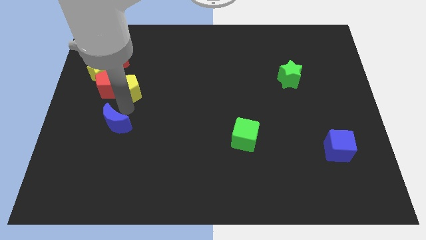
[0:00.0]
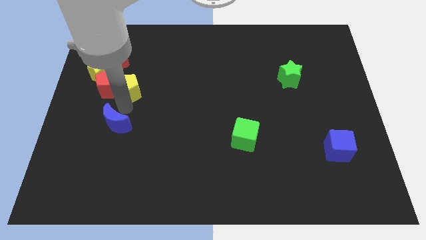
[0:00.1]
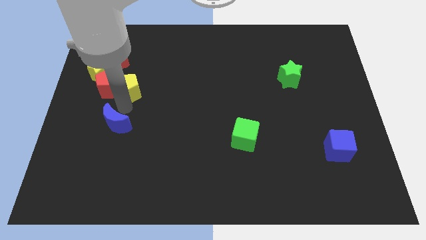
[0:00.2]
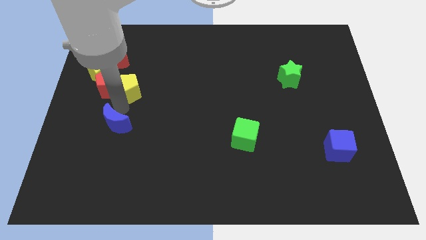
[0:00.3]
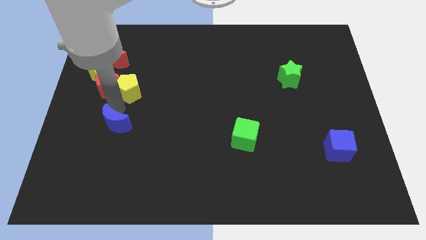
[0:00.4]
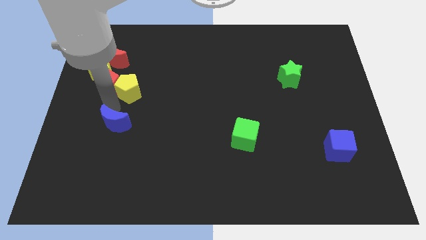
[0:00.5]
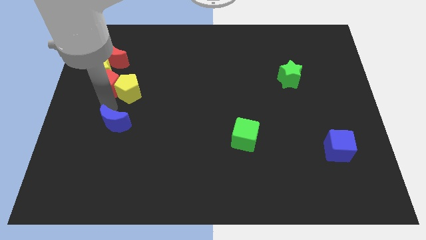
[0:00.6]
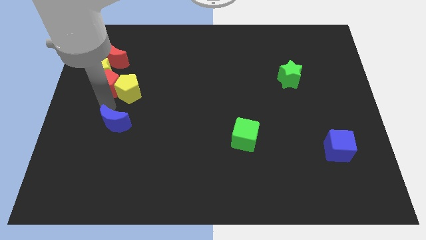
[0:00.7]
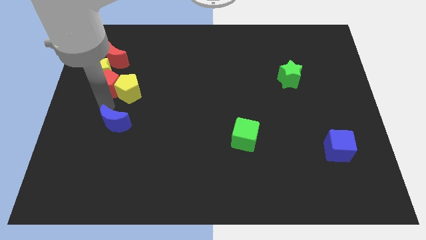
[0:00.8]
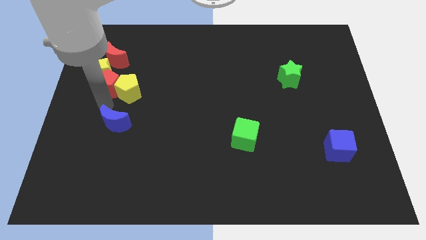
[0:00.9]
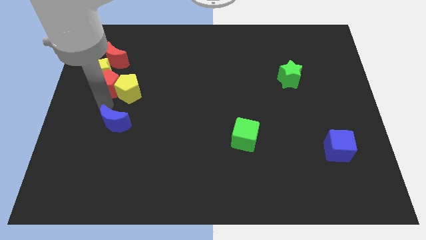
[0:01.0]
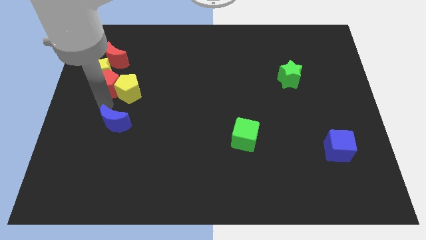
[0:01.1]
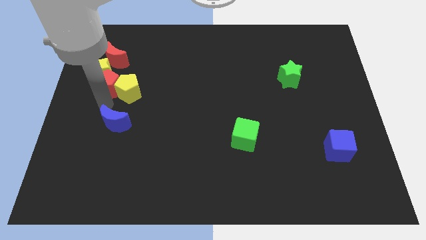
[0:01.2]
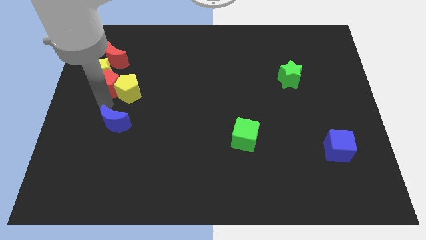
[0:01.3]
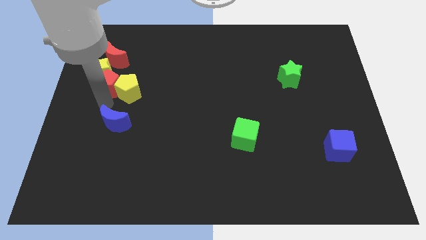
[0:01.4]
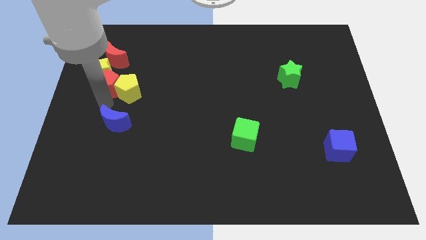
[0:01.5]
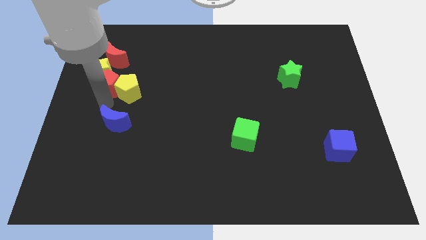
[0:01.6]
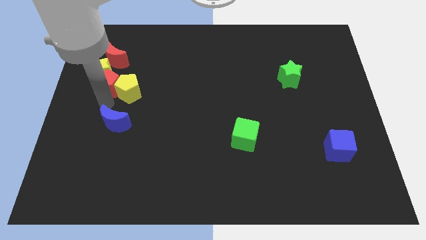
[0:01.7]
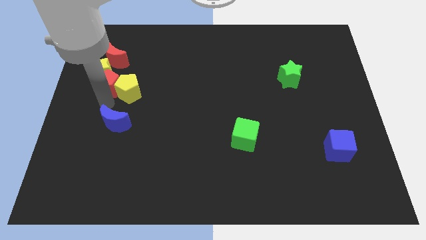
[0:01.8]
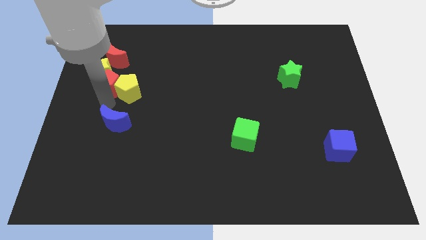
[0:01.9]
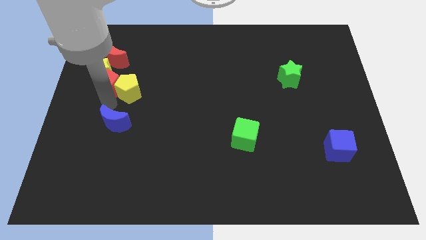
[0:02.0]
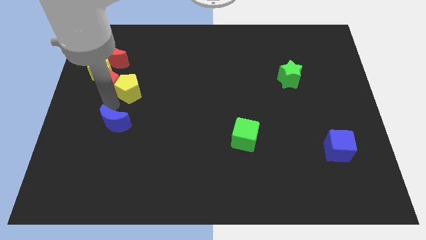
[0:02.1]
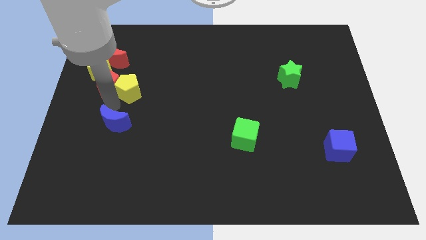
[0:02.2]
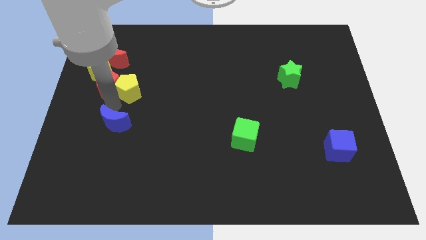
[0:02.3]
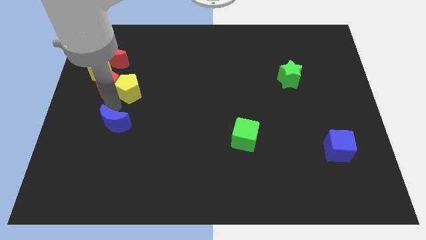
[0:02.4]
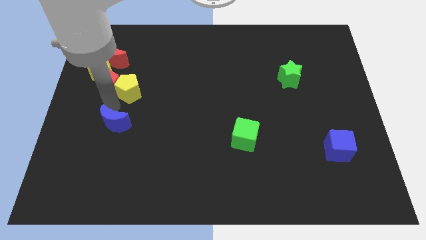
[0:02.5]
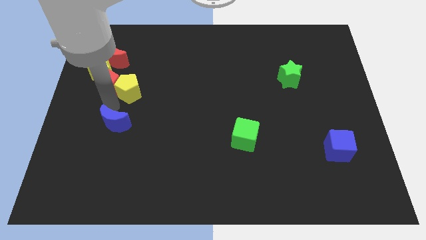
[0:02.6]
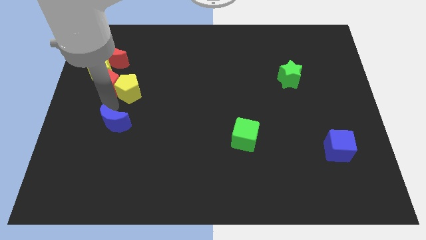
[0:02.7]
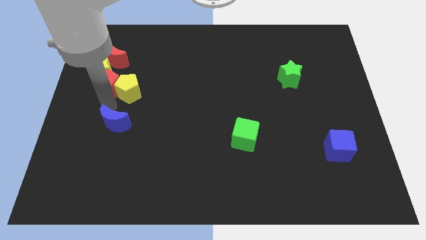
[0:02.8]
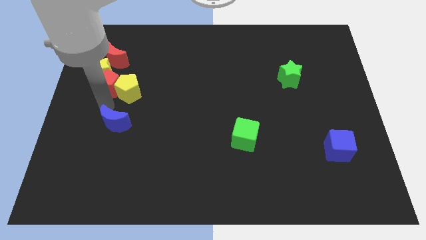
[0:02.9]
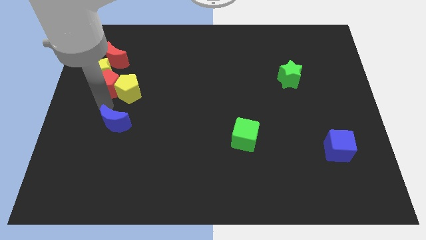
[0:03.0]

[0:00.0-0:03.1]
point the arm below the red pentagon

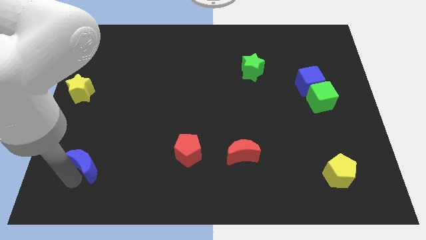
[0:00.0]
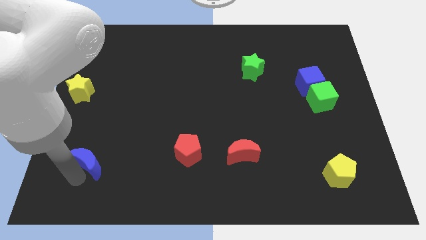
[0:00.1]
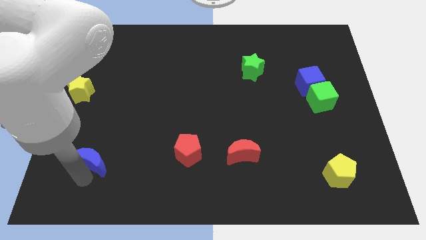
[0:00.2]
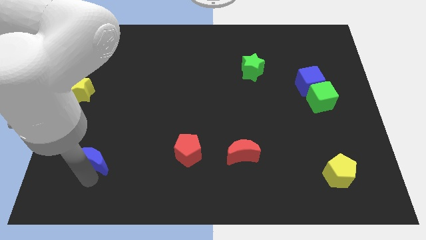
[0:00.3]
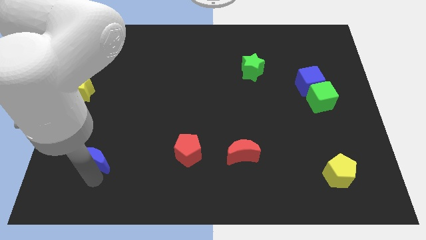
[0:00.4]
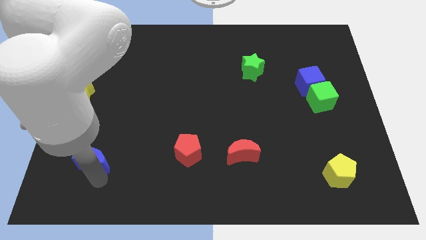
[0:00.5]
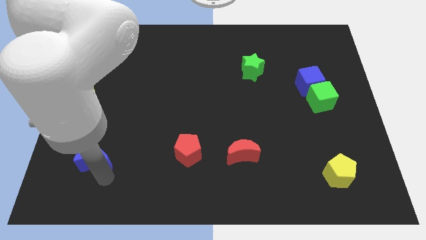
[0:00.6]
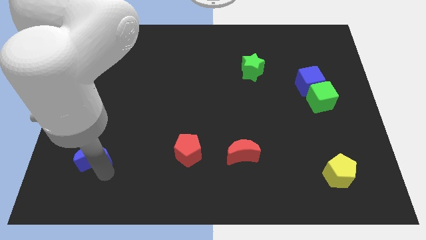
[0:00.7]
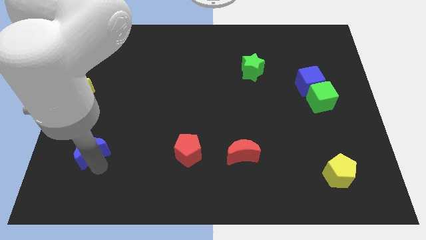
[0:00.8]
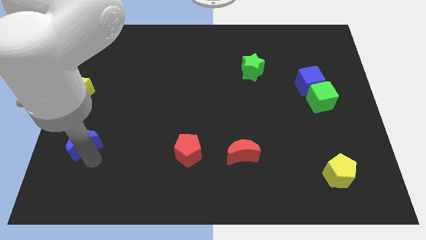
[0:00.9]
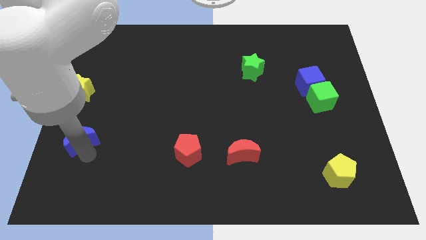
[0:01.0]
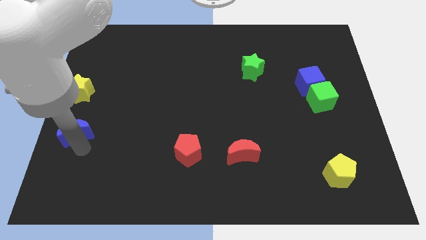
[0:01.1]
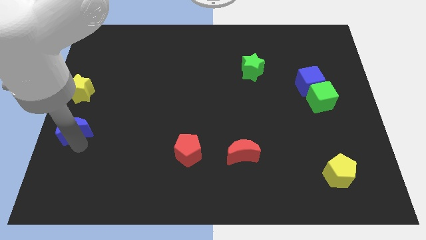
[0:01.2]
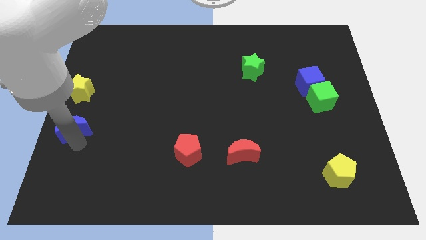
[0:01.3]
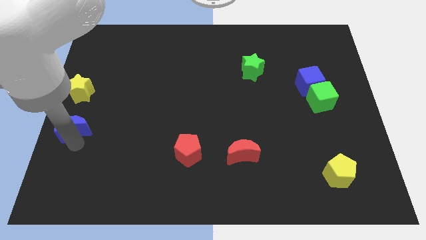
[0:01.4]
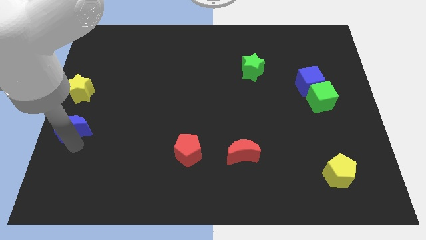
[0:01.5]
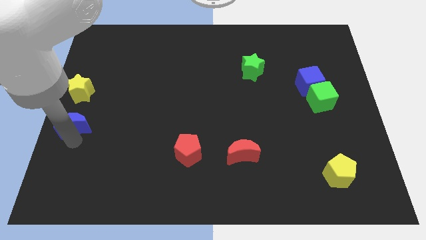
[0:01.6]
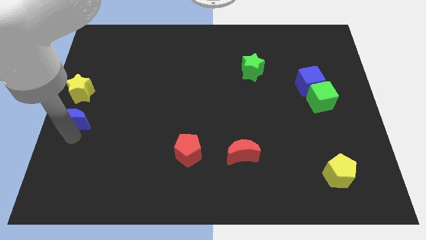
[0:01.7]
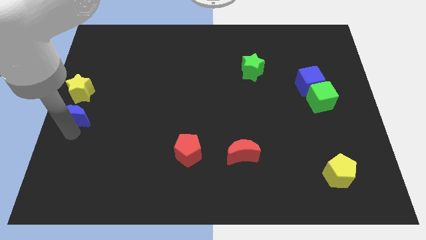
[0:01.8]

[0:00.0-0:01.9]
place the blue moon below the yellow star

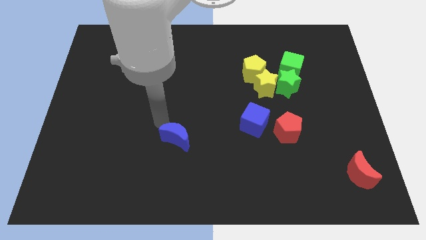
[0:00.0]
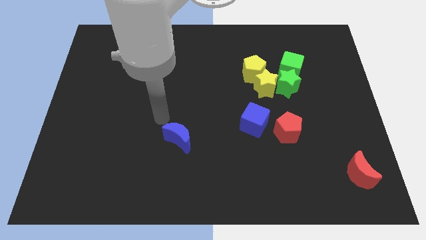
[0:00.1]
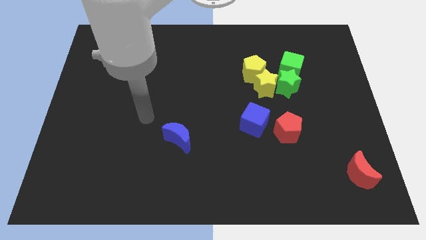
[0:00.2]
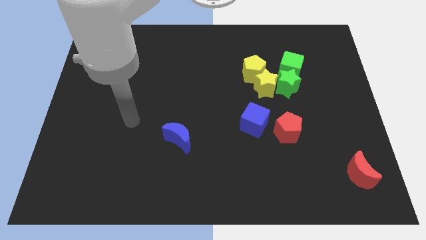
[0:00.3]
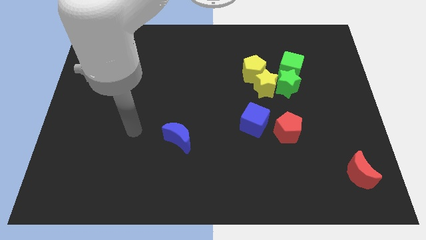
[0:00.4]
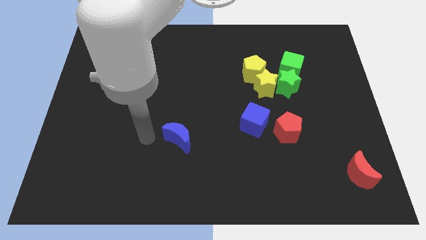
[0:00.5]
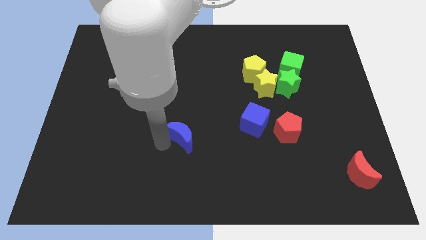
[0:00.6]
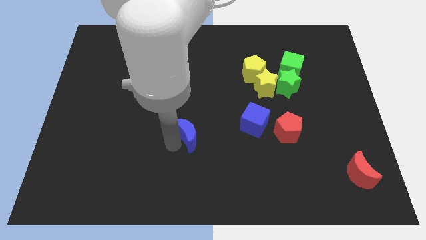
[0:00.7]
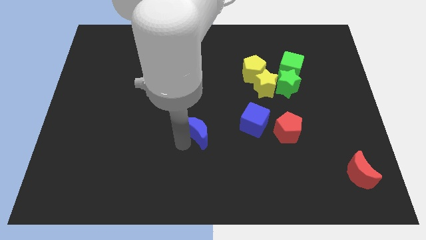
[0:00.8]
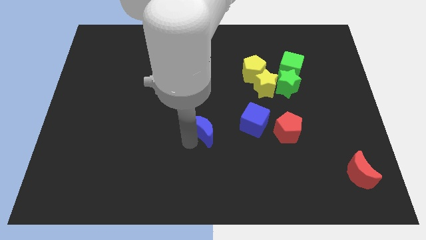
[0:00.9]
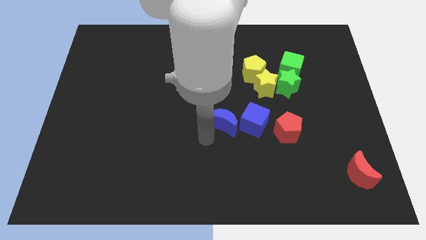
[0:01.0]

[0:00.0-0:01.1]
place blue crescent to the left of blue cube

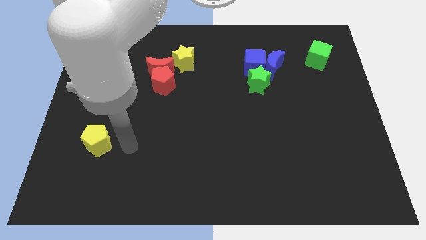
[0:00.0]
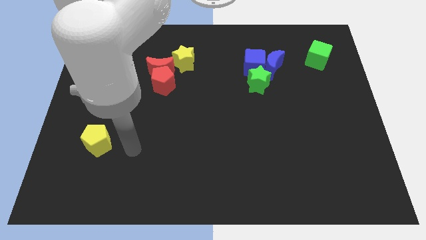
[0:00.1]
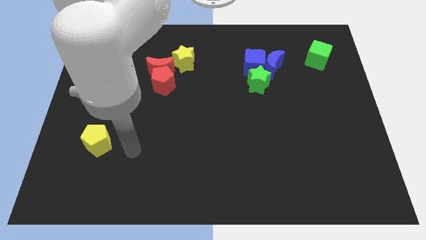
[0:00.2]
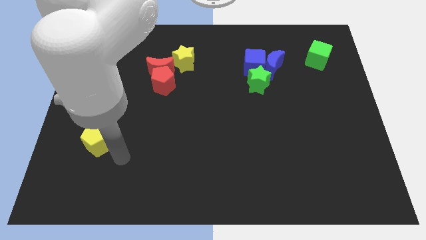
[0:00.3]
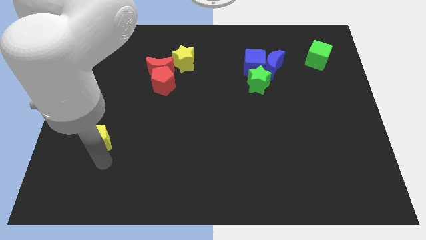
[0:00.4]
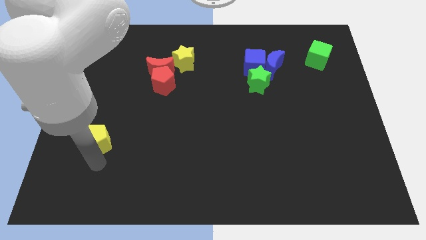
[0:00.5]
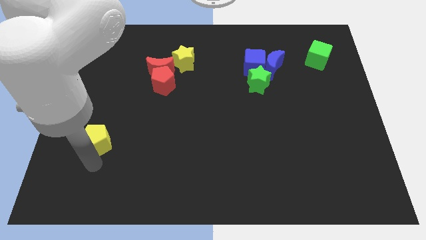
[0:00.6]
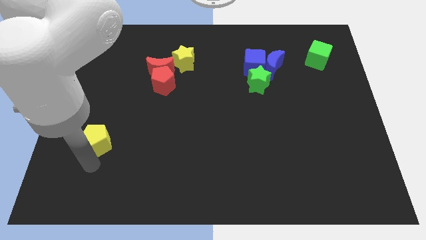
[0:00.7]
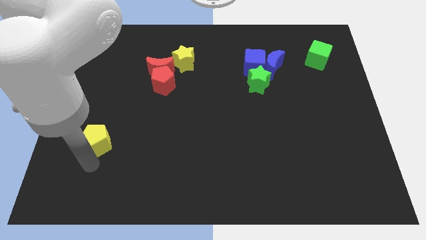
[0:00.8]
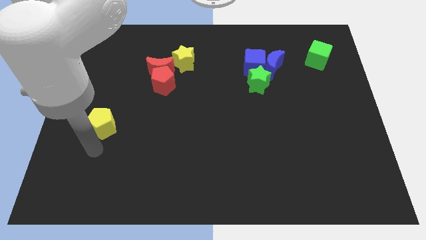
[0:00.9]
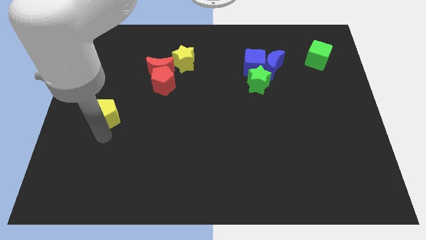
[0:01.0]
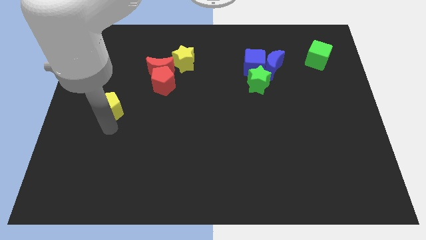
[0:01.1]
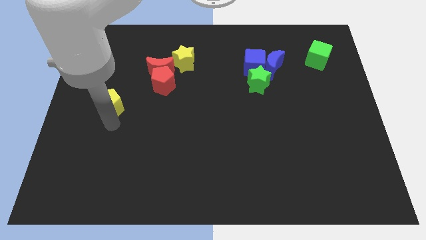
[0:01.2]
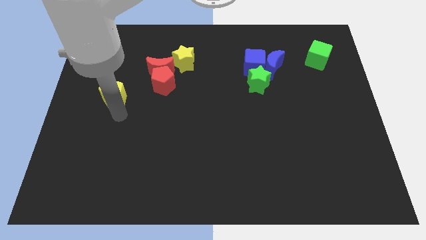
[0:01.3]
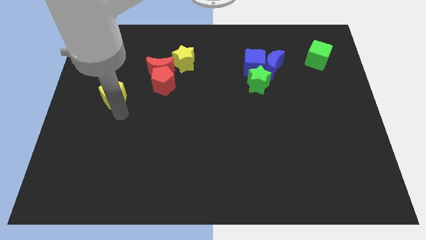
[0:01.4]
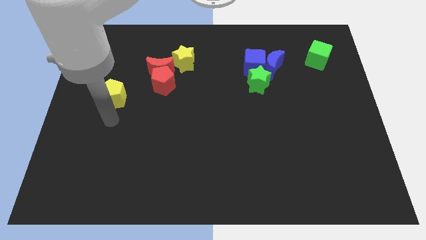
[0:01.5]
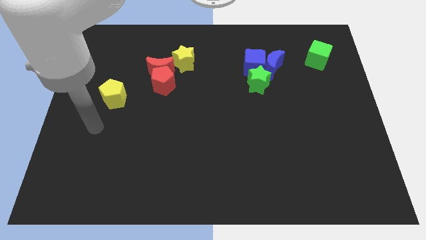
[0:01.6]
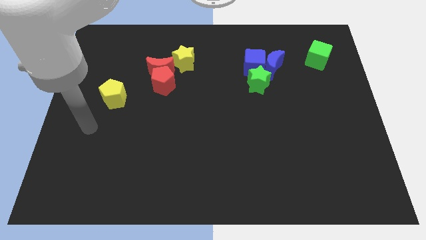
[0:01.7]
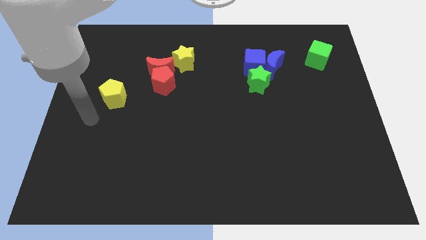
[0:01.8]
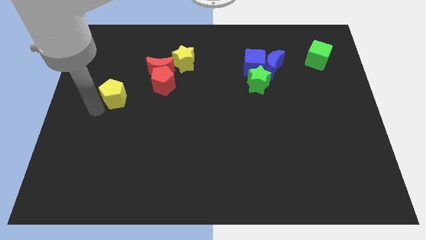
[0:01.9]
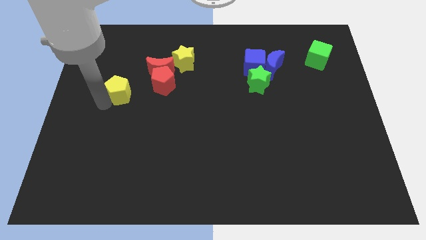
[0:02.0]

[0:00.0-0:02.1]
push yellow pentagon to the bottom left of red pentagon

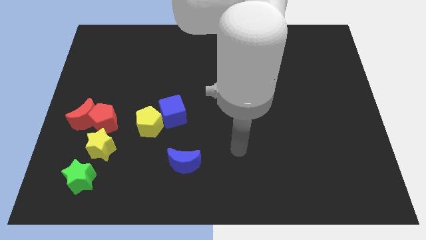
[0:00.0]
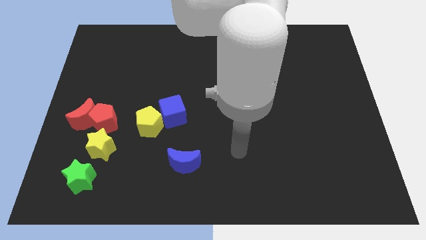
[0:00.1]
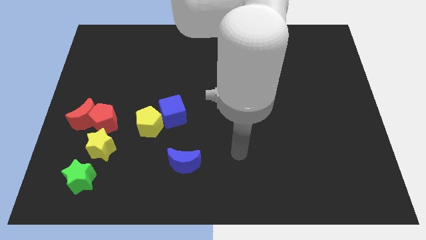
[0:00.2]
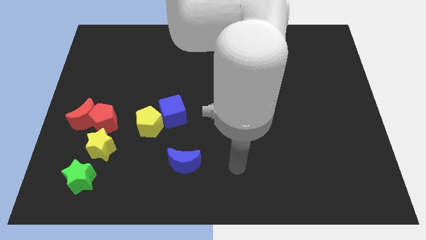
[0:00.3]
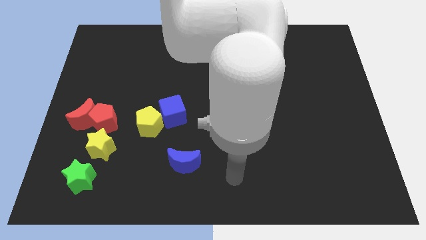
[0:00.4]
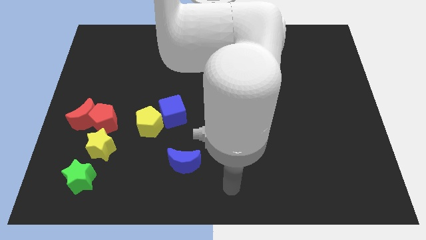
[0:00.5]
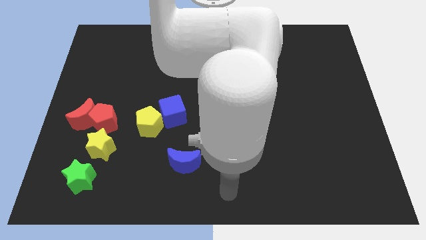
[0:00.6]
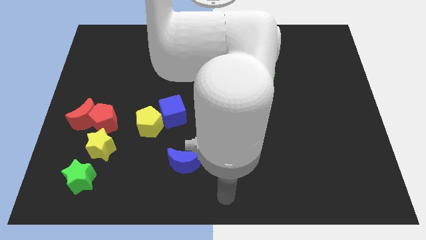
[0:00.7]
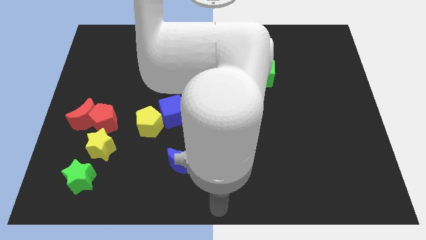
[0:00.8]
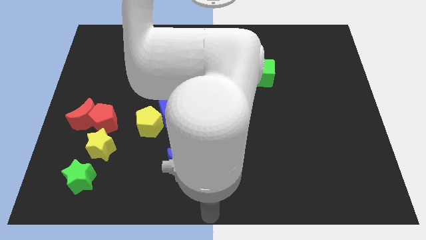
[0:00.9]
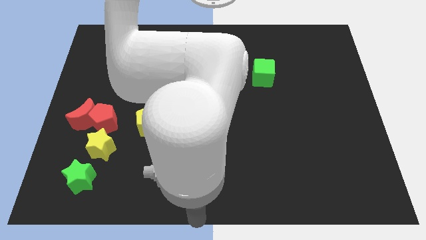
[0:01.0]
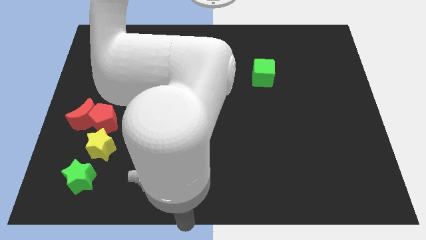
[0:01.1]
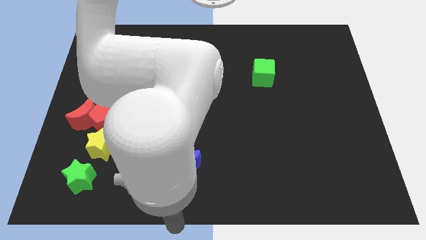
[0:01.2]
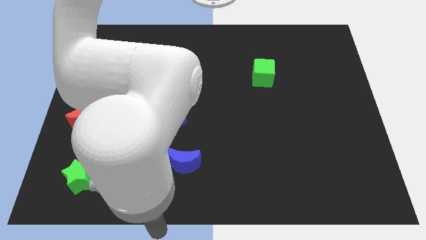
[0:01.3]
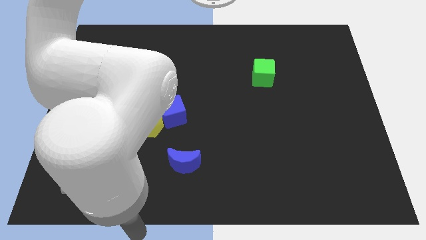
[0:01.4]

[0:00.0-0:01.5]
move the arm to the bottom of the board
